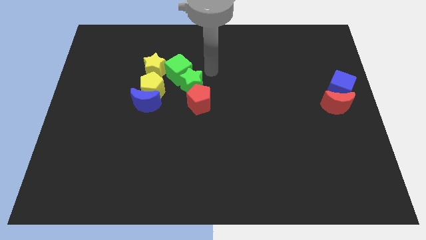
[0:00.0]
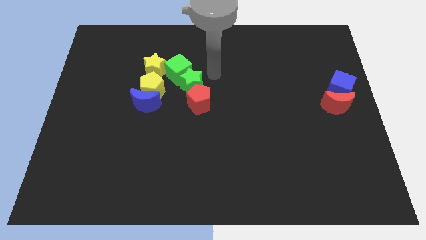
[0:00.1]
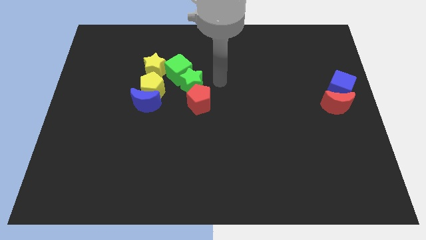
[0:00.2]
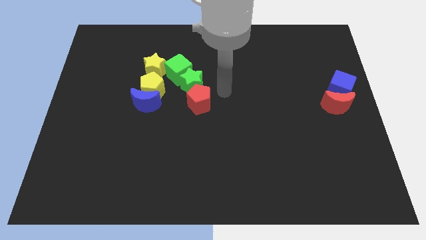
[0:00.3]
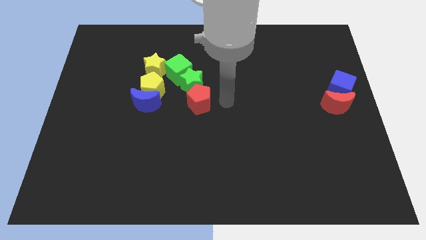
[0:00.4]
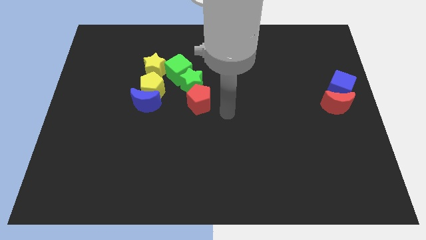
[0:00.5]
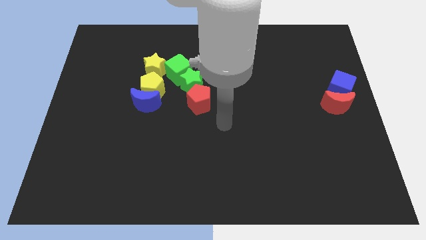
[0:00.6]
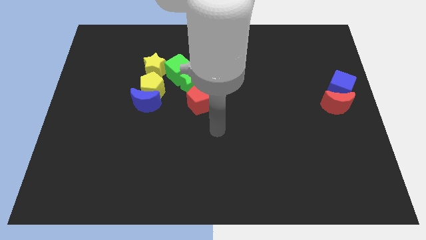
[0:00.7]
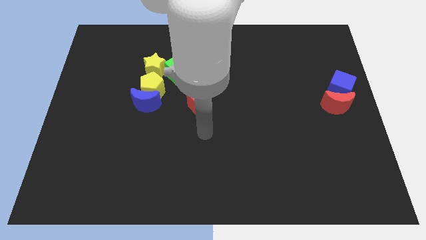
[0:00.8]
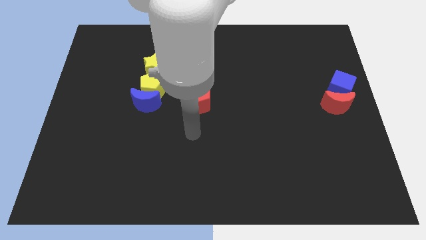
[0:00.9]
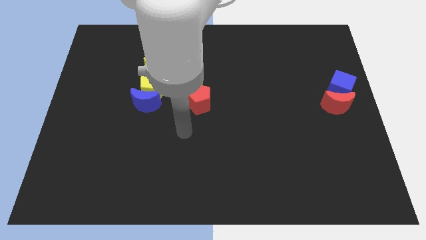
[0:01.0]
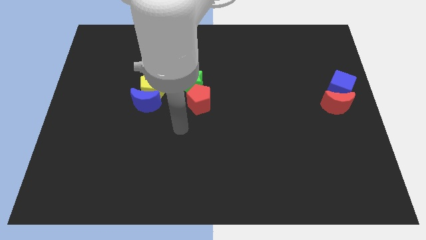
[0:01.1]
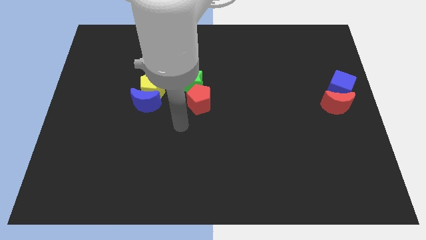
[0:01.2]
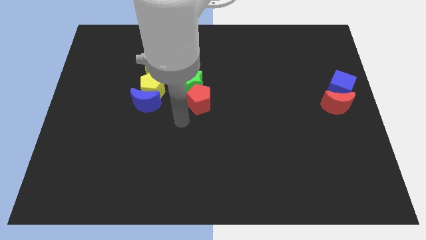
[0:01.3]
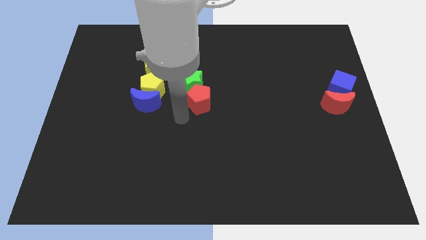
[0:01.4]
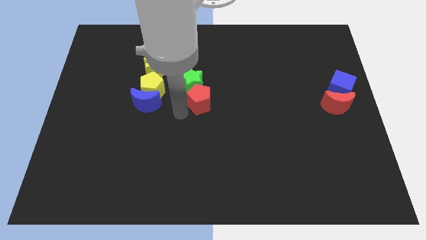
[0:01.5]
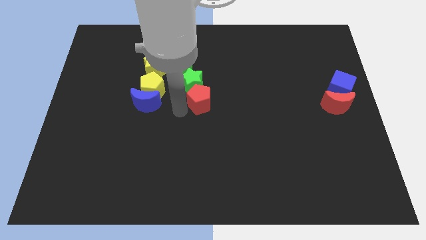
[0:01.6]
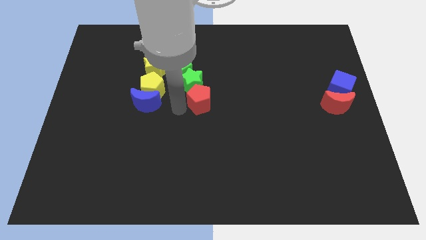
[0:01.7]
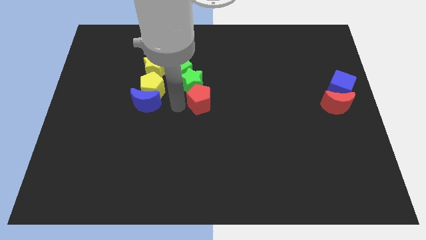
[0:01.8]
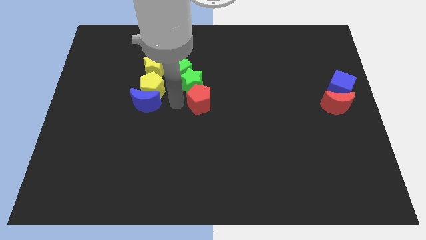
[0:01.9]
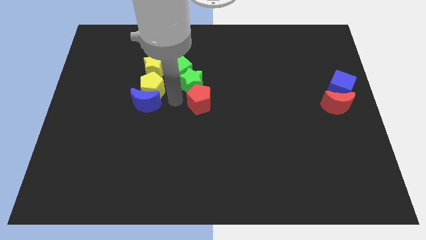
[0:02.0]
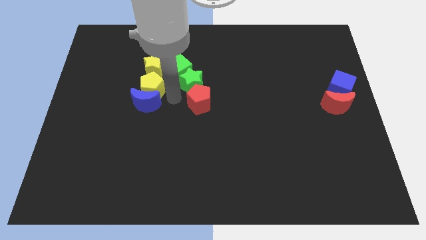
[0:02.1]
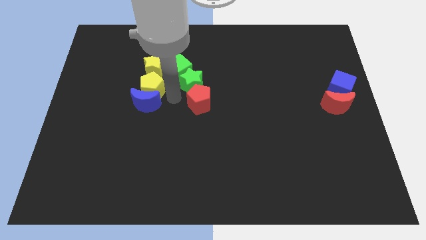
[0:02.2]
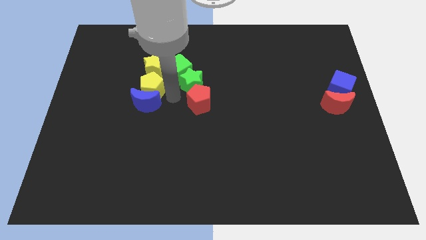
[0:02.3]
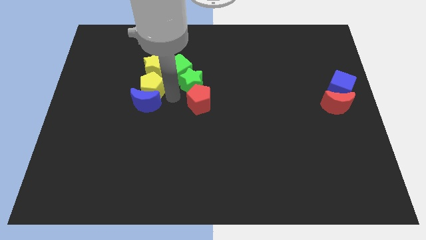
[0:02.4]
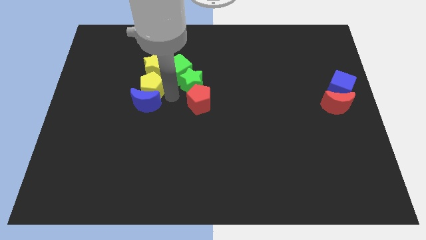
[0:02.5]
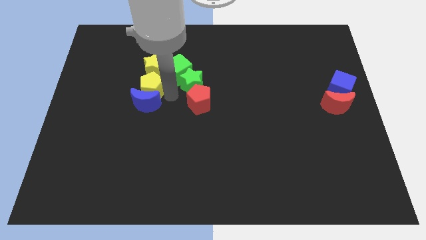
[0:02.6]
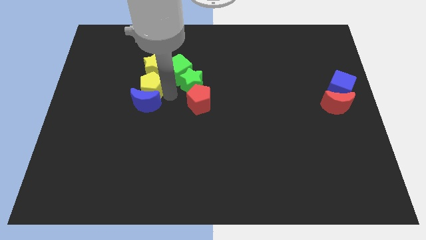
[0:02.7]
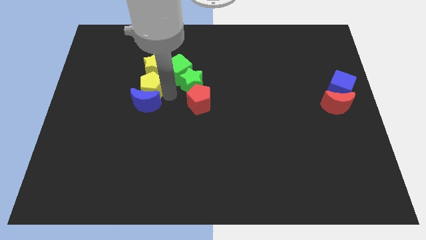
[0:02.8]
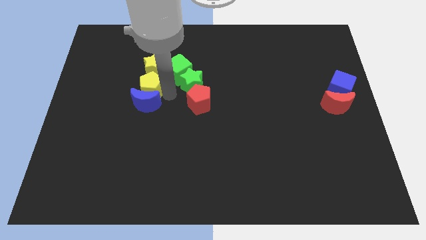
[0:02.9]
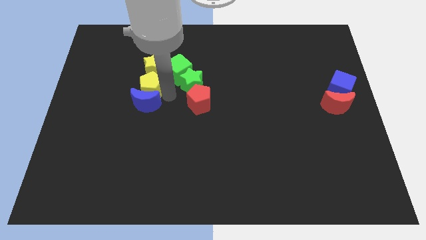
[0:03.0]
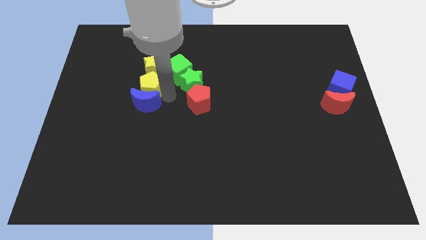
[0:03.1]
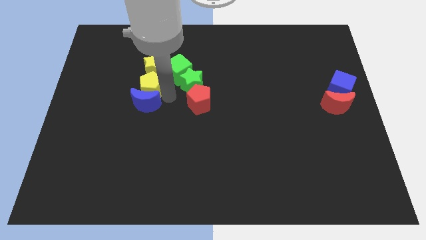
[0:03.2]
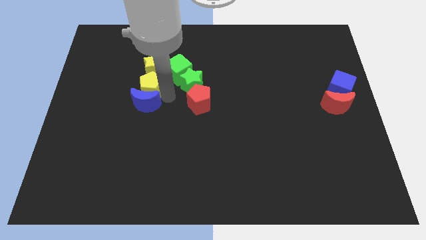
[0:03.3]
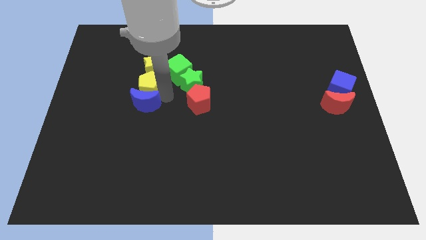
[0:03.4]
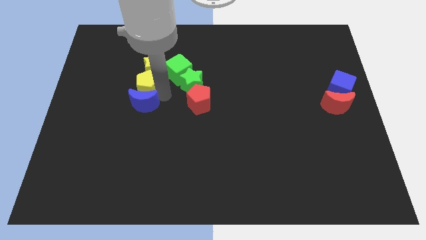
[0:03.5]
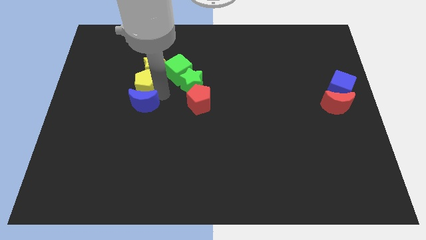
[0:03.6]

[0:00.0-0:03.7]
slightly move the yellow pentagon to the left

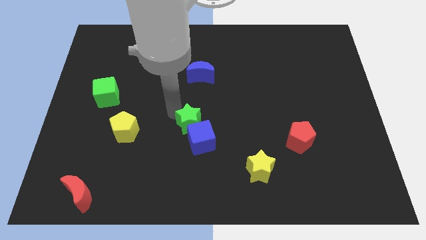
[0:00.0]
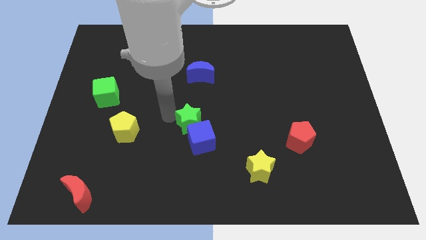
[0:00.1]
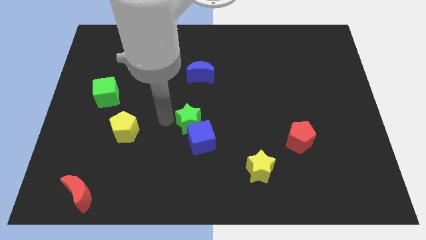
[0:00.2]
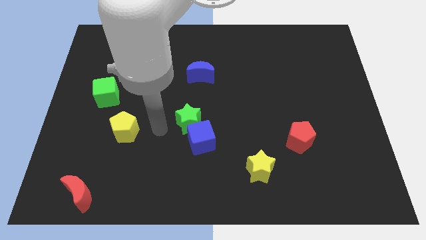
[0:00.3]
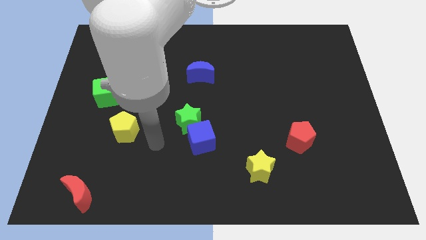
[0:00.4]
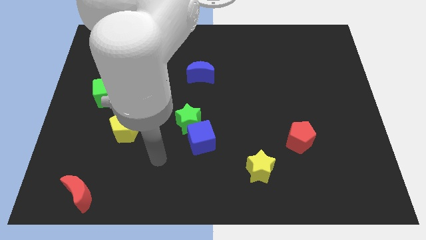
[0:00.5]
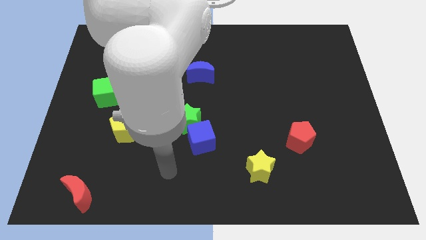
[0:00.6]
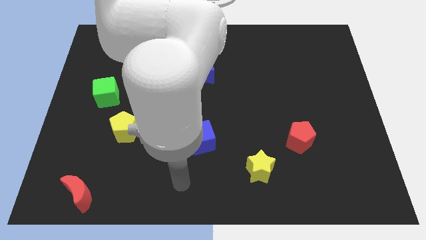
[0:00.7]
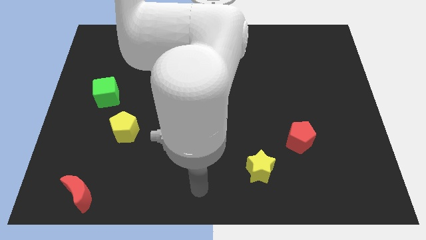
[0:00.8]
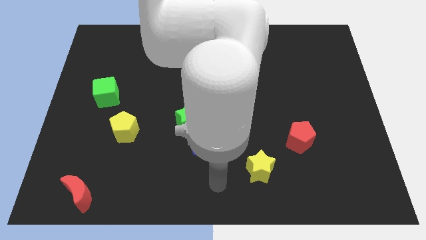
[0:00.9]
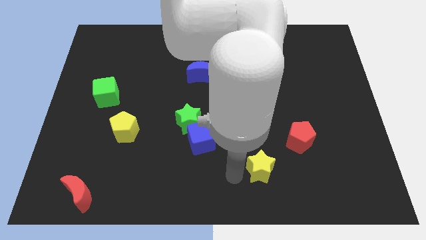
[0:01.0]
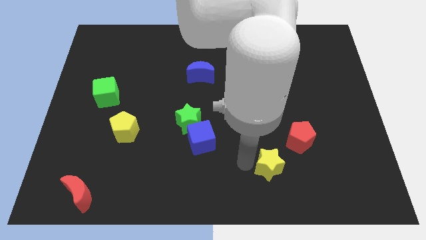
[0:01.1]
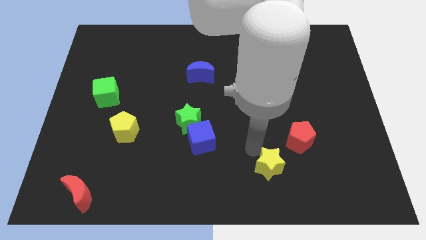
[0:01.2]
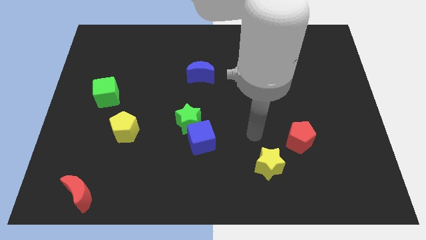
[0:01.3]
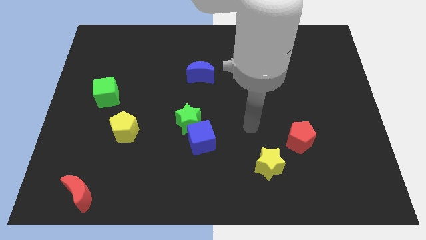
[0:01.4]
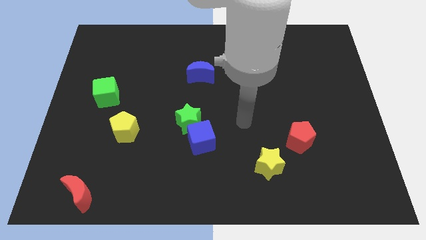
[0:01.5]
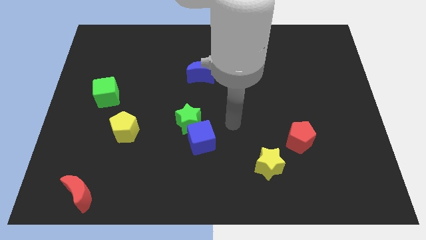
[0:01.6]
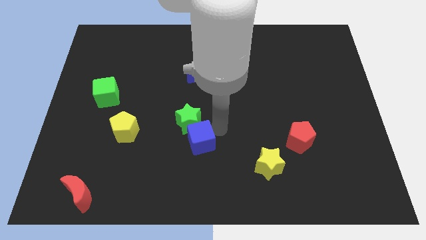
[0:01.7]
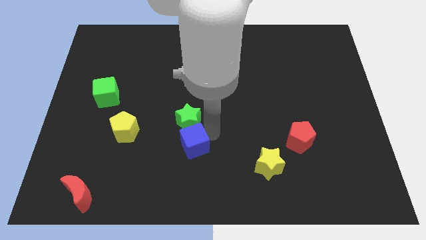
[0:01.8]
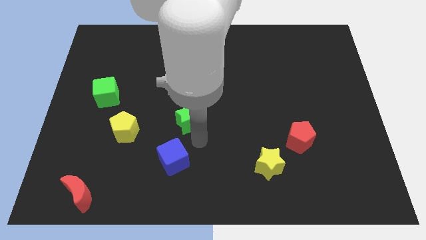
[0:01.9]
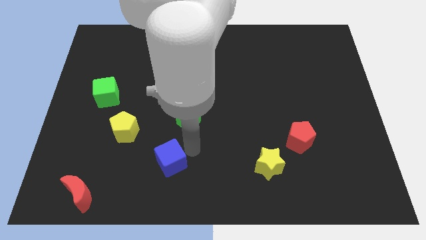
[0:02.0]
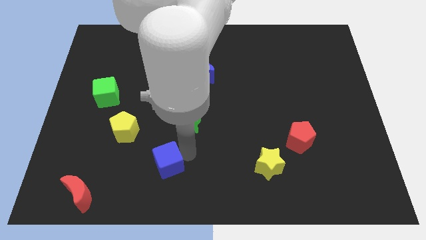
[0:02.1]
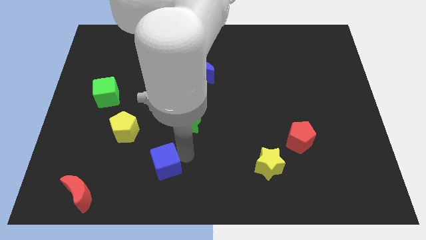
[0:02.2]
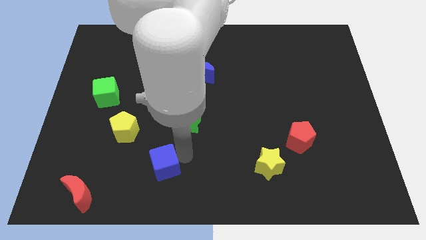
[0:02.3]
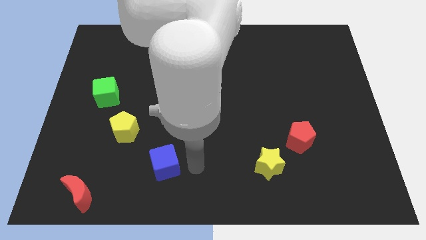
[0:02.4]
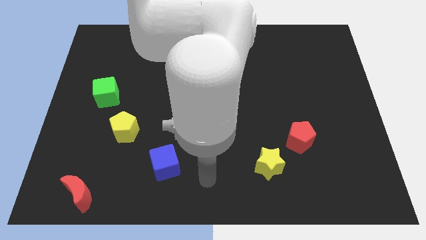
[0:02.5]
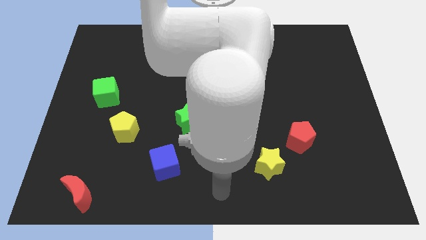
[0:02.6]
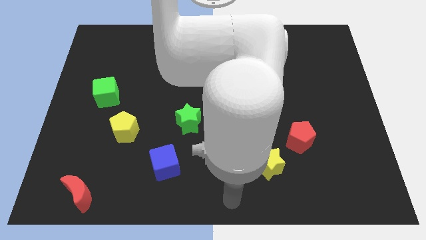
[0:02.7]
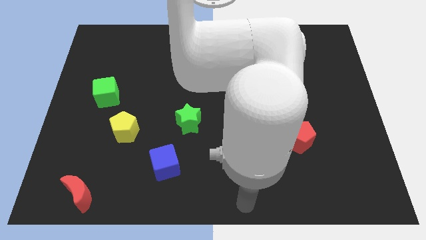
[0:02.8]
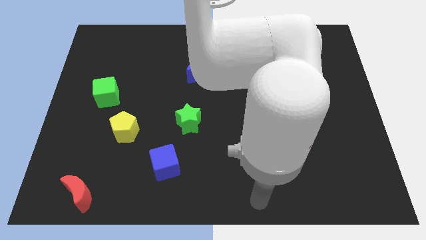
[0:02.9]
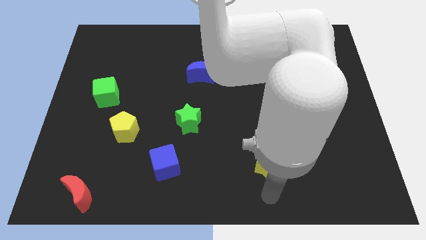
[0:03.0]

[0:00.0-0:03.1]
push the blue cube horizontally below the bottom right side of the yellow pentagon

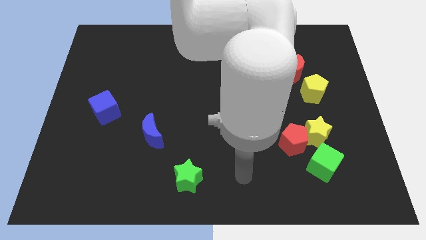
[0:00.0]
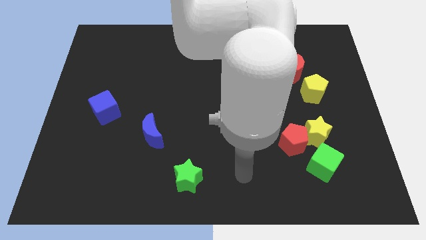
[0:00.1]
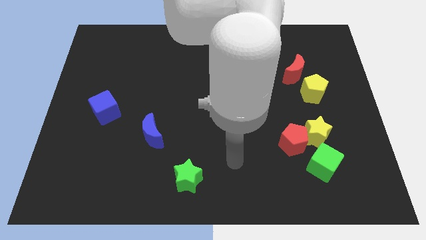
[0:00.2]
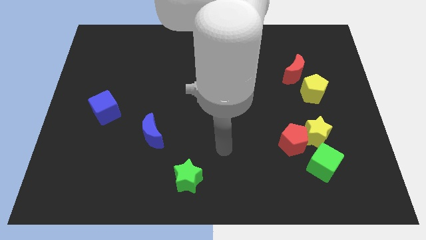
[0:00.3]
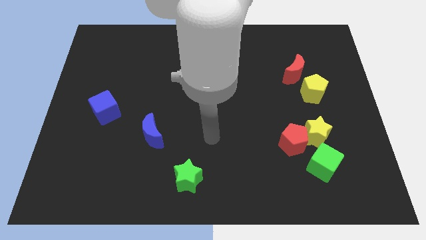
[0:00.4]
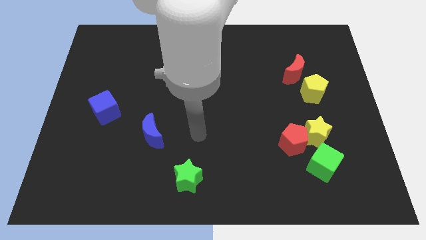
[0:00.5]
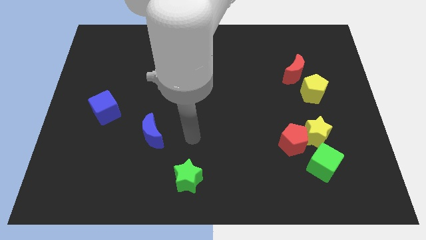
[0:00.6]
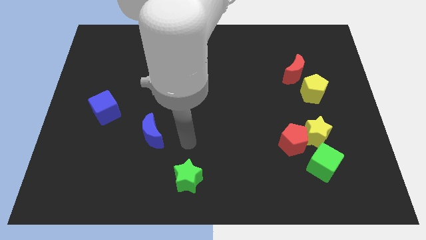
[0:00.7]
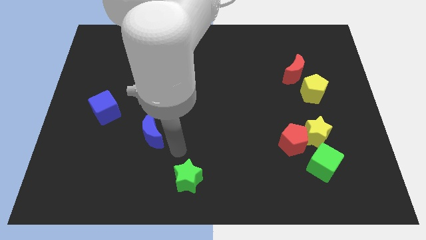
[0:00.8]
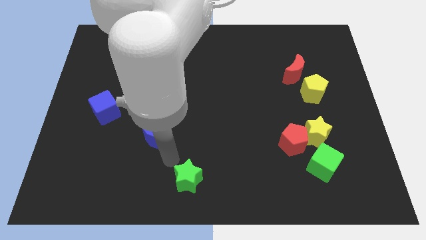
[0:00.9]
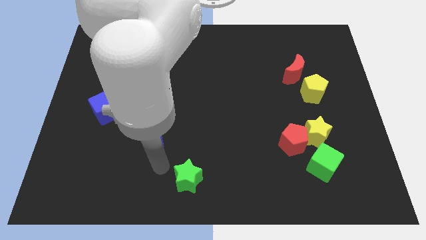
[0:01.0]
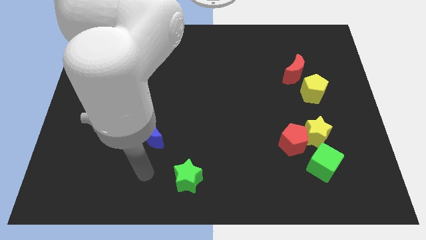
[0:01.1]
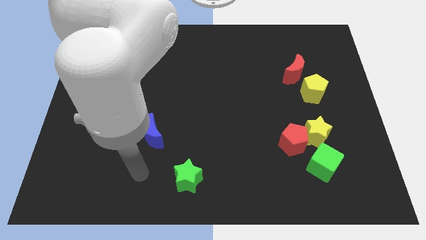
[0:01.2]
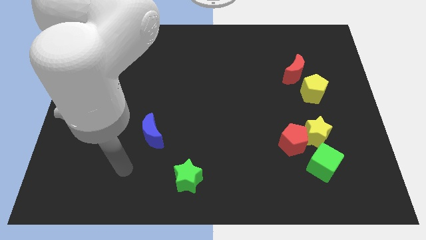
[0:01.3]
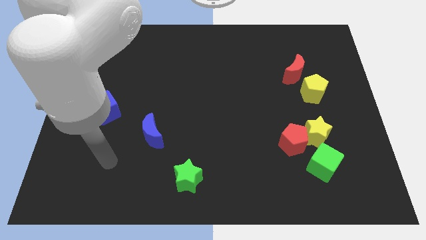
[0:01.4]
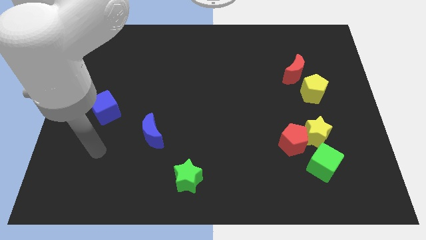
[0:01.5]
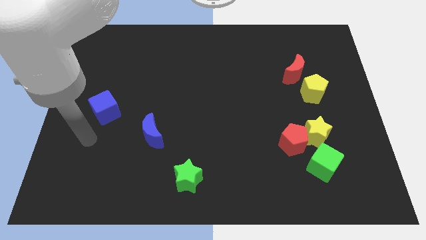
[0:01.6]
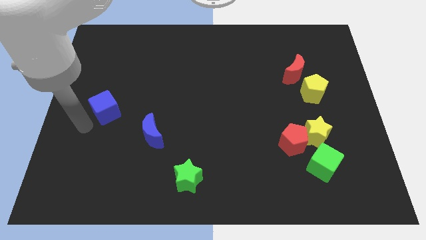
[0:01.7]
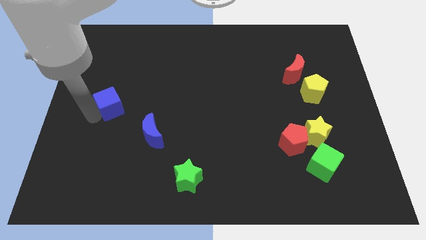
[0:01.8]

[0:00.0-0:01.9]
move your arm close to the left side of the blue cube

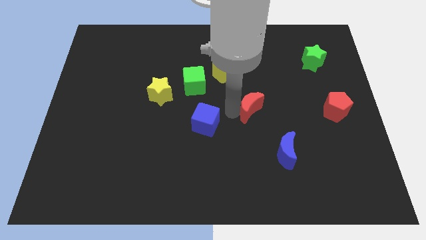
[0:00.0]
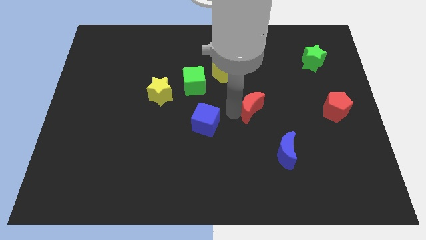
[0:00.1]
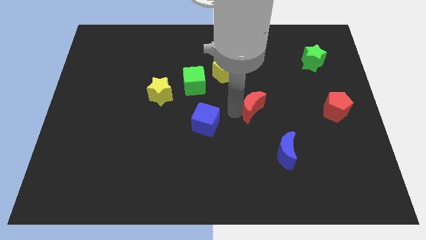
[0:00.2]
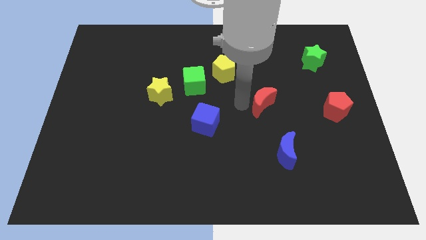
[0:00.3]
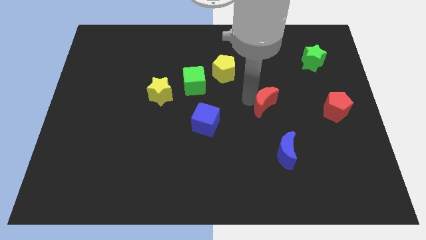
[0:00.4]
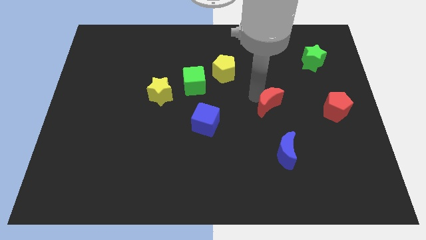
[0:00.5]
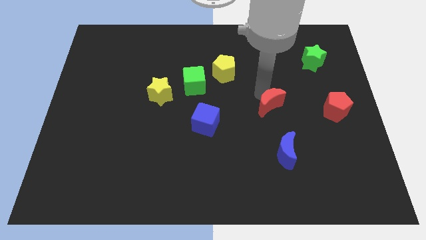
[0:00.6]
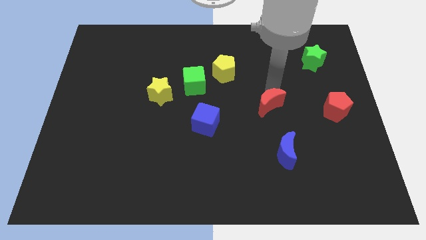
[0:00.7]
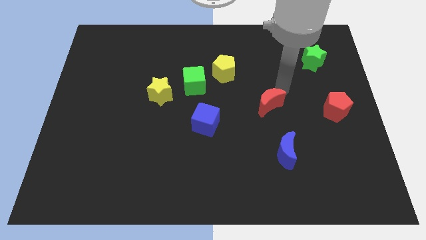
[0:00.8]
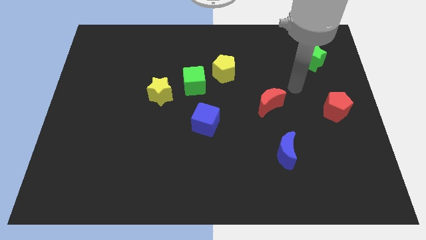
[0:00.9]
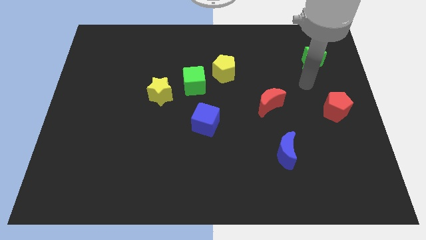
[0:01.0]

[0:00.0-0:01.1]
move the red crescent to the right of the board
